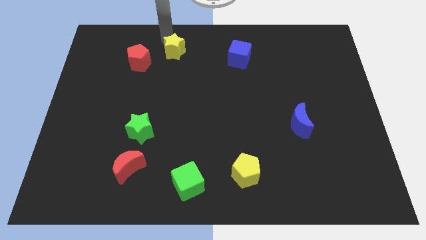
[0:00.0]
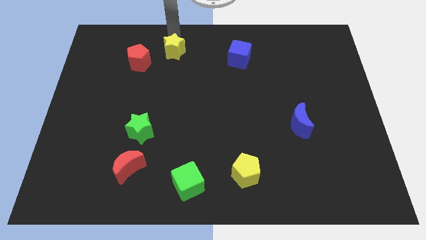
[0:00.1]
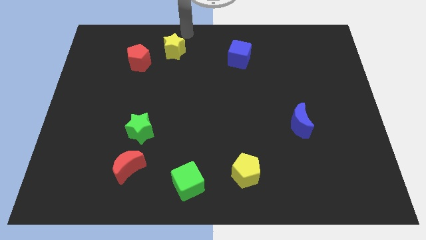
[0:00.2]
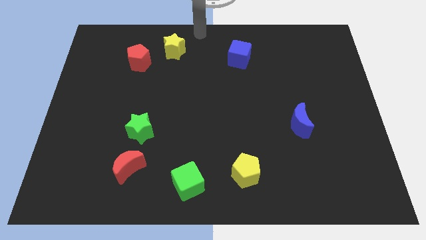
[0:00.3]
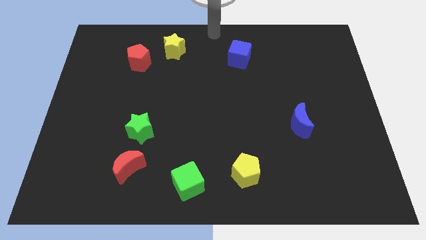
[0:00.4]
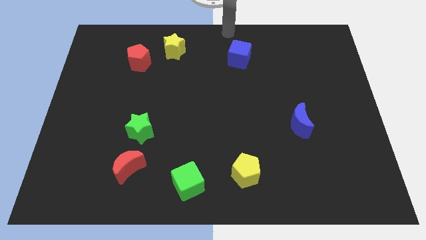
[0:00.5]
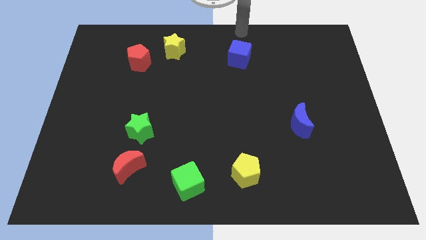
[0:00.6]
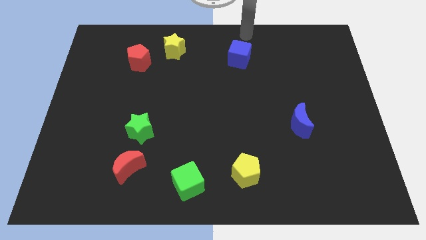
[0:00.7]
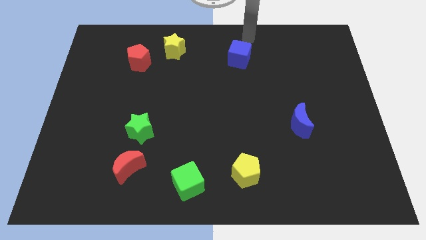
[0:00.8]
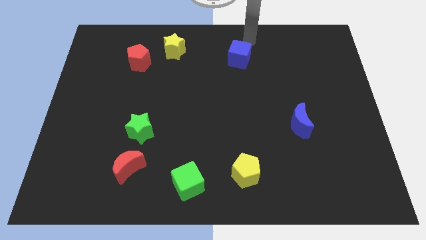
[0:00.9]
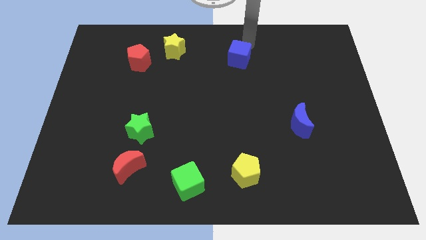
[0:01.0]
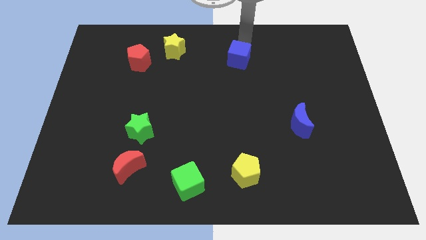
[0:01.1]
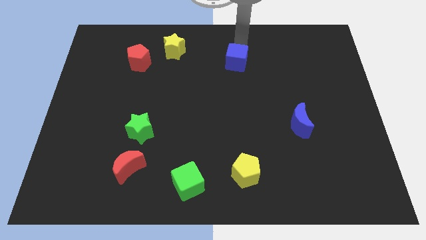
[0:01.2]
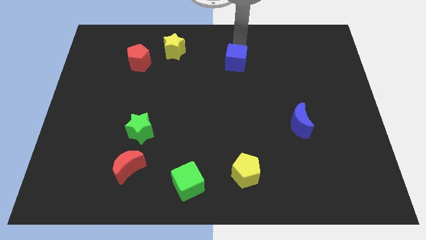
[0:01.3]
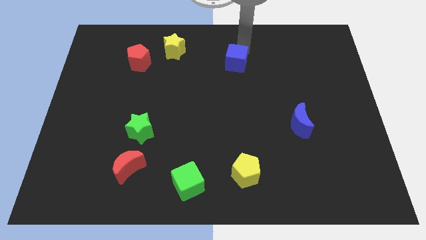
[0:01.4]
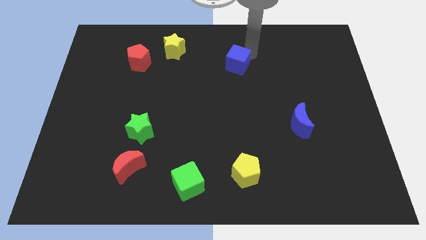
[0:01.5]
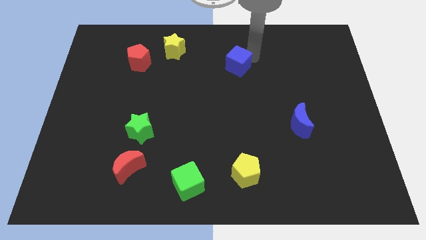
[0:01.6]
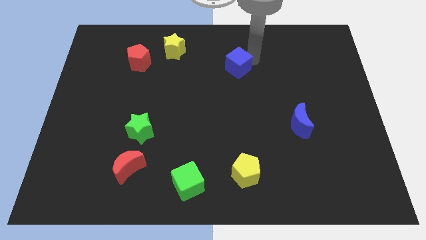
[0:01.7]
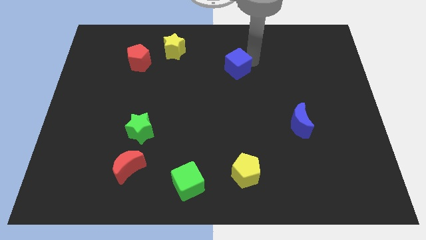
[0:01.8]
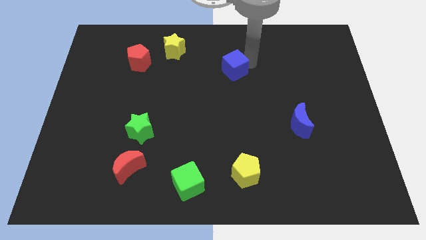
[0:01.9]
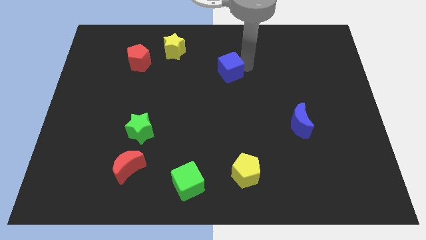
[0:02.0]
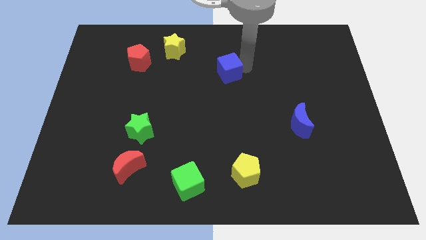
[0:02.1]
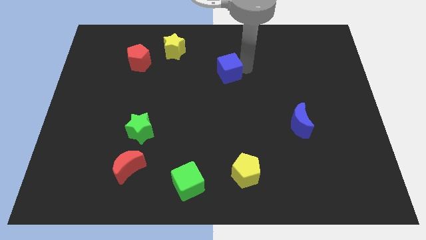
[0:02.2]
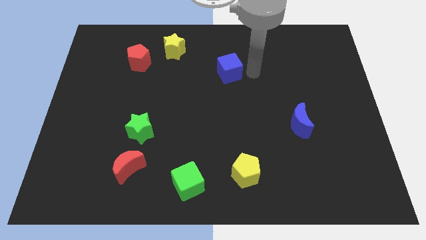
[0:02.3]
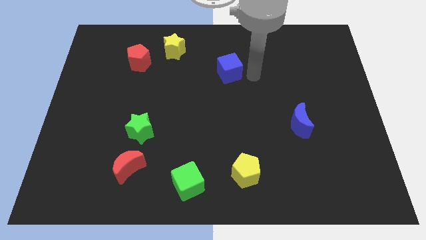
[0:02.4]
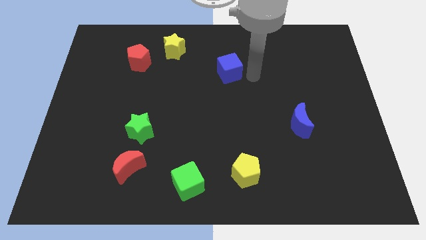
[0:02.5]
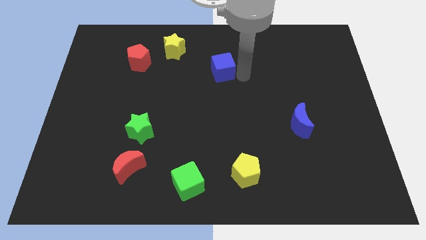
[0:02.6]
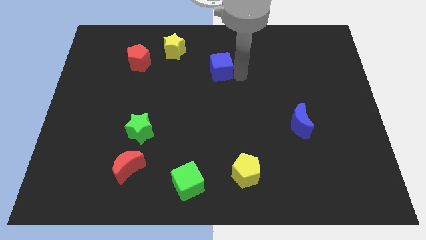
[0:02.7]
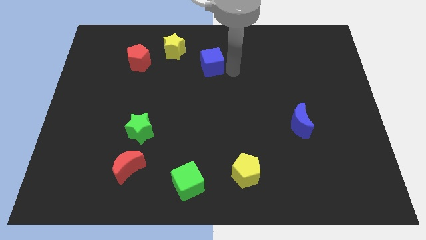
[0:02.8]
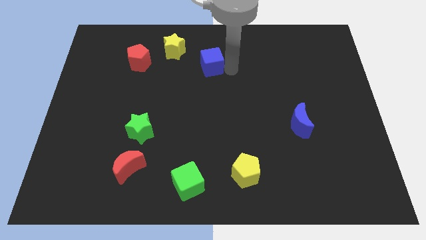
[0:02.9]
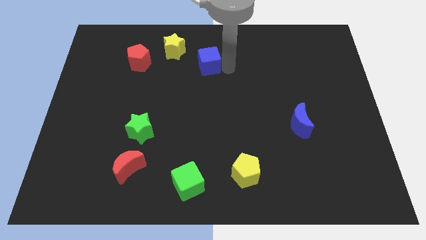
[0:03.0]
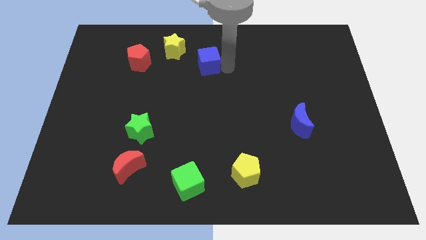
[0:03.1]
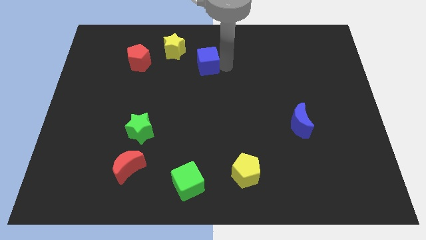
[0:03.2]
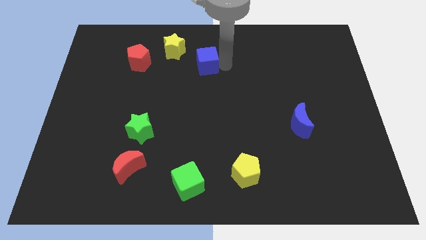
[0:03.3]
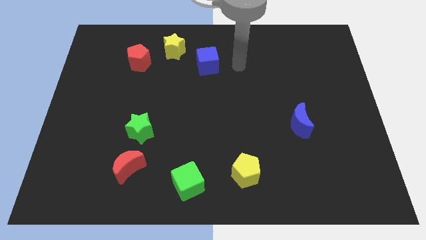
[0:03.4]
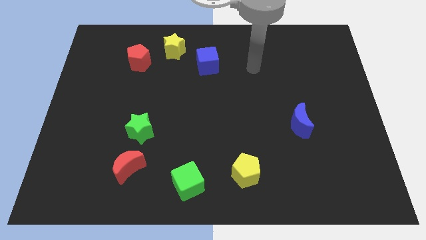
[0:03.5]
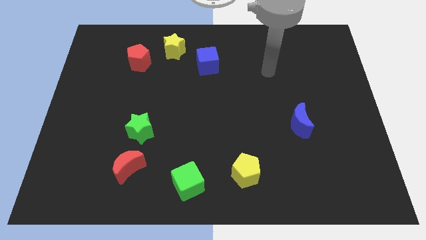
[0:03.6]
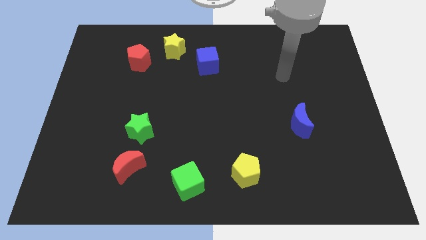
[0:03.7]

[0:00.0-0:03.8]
put the red pentagon and the blue cube in a line horizontally

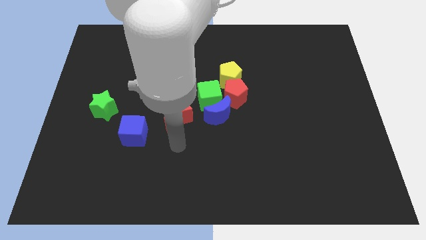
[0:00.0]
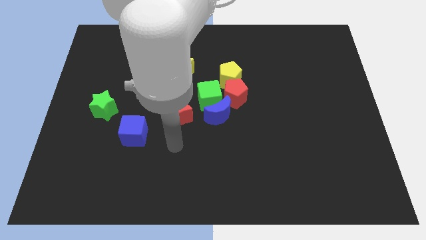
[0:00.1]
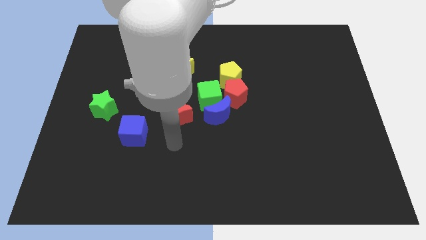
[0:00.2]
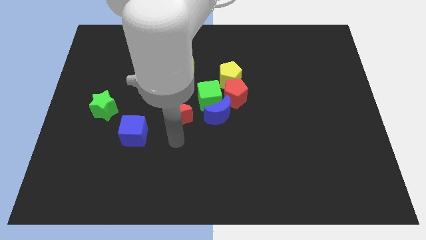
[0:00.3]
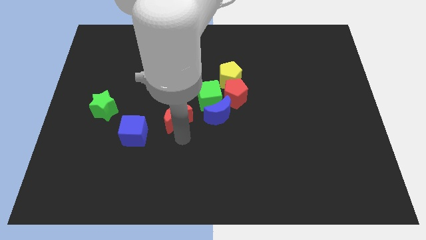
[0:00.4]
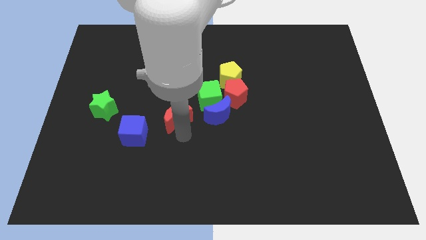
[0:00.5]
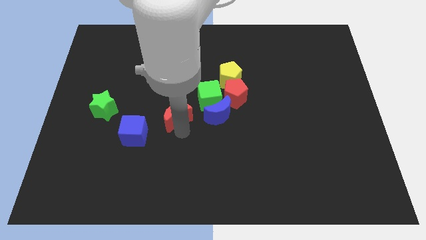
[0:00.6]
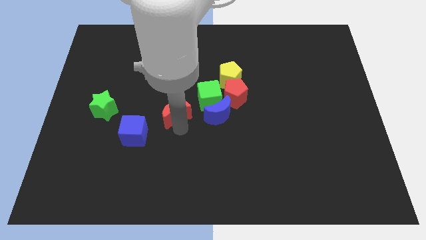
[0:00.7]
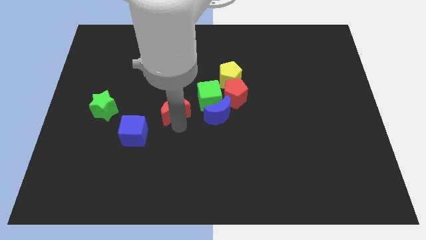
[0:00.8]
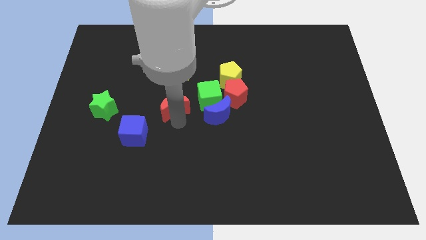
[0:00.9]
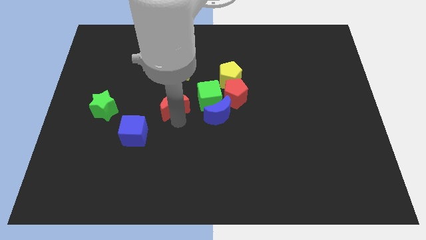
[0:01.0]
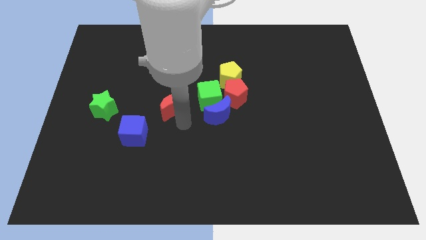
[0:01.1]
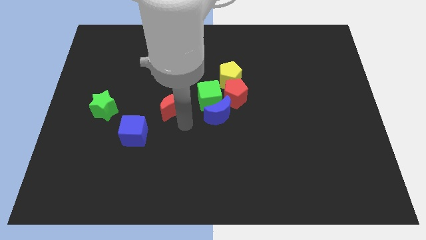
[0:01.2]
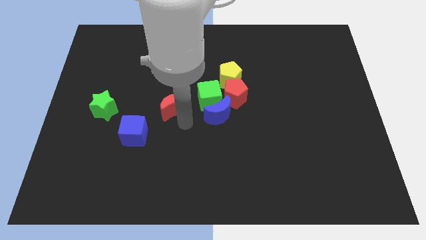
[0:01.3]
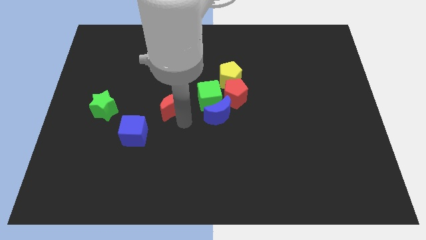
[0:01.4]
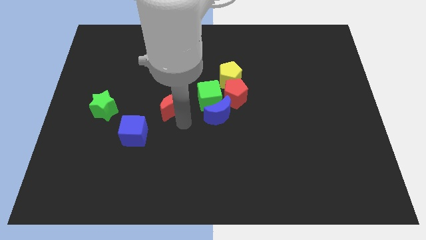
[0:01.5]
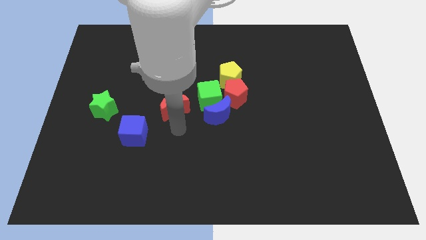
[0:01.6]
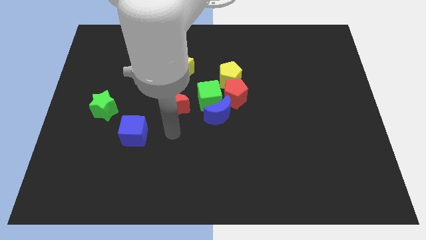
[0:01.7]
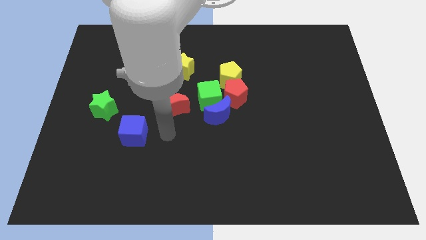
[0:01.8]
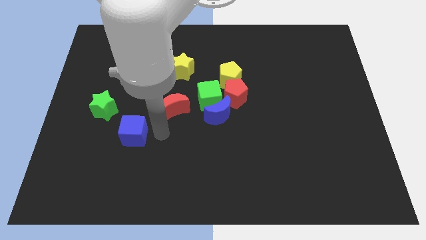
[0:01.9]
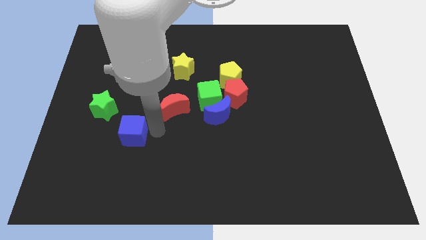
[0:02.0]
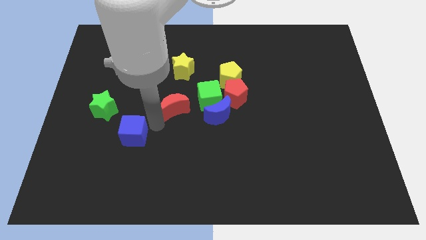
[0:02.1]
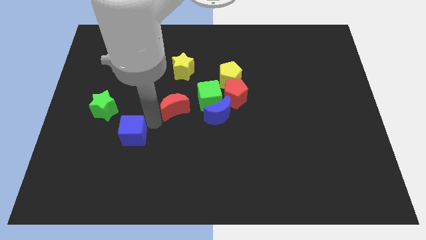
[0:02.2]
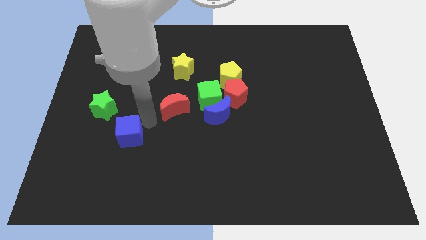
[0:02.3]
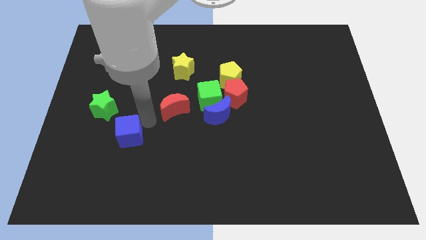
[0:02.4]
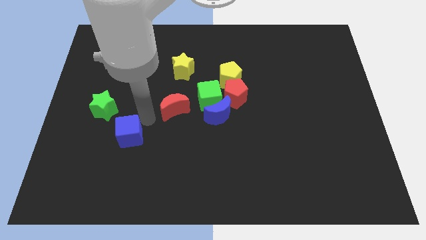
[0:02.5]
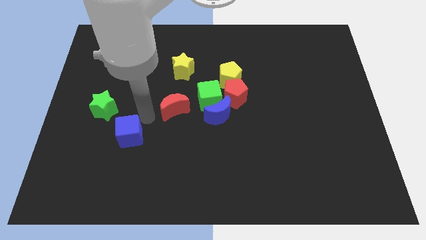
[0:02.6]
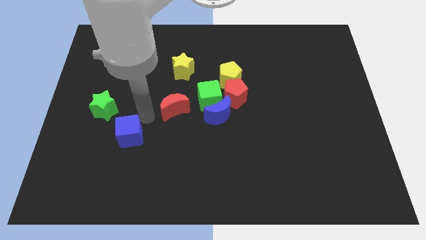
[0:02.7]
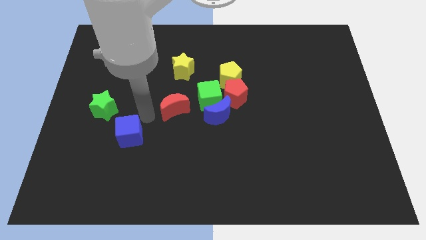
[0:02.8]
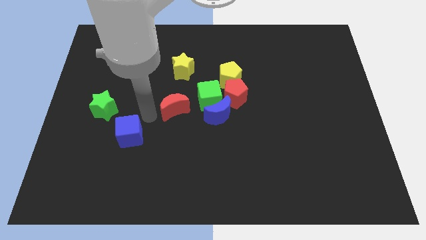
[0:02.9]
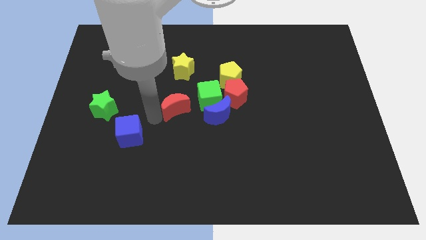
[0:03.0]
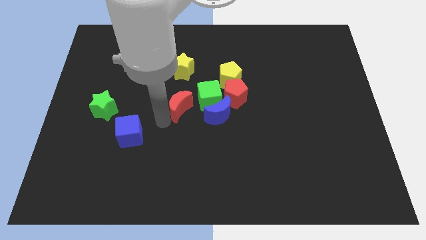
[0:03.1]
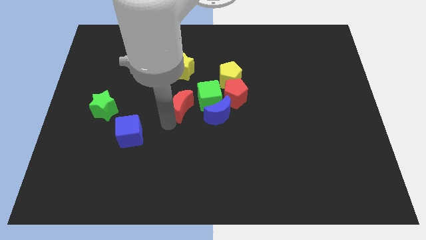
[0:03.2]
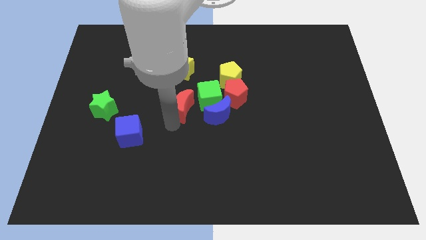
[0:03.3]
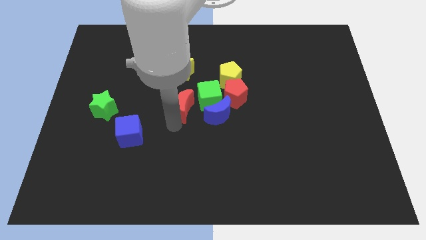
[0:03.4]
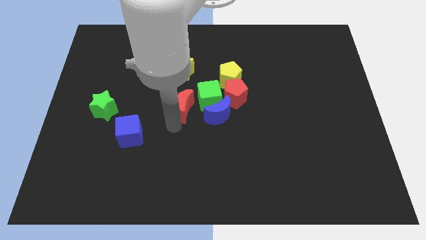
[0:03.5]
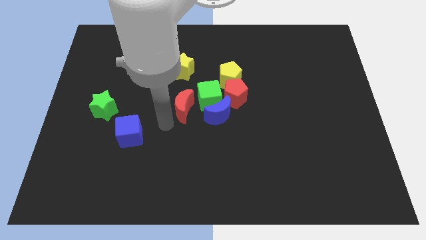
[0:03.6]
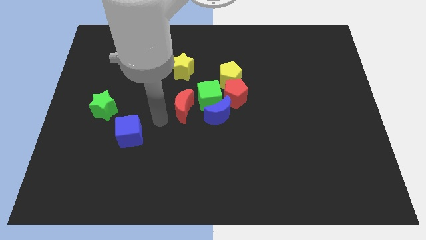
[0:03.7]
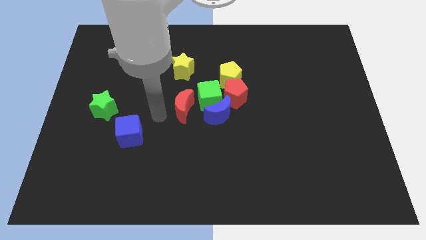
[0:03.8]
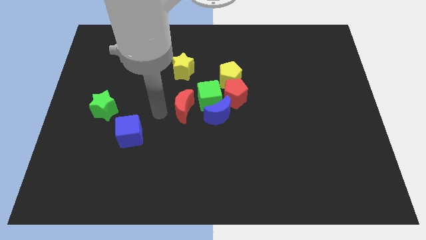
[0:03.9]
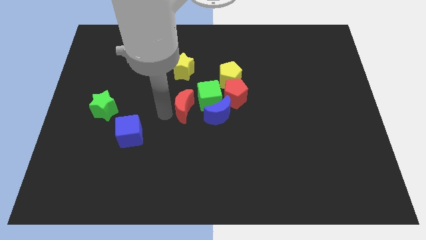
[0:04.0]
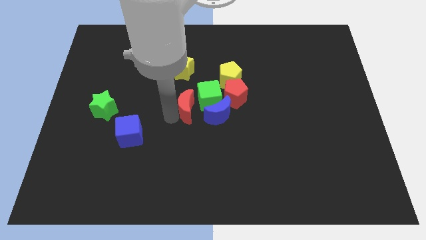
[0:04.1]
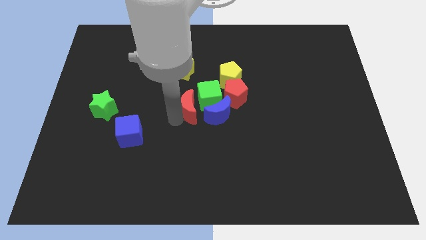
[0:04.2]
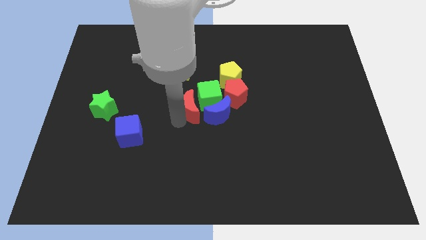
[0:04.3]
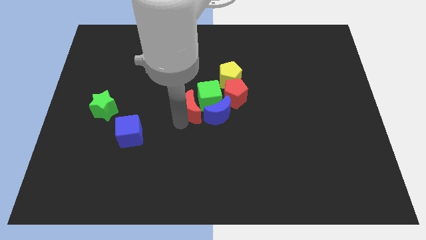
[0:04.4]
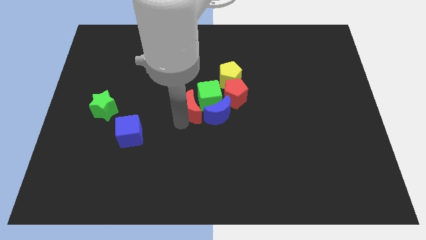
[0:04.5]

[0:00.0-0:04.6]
push the red half moon left to the green cube

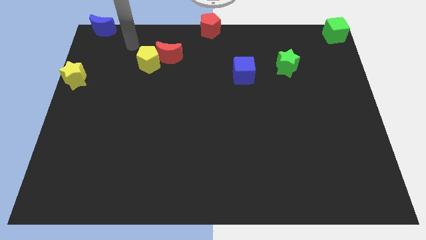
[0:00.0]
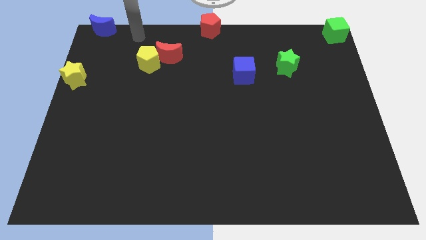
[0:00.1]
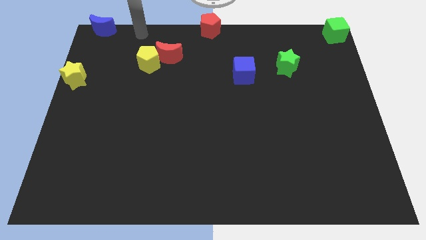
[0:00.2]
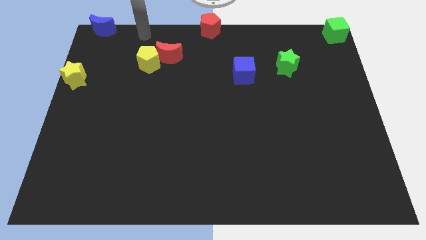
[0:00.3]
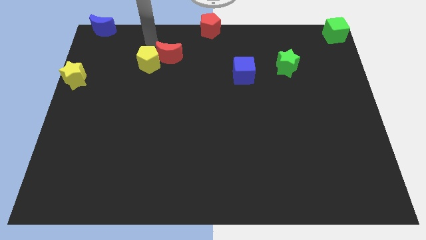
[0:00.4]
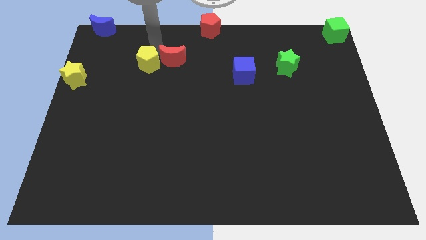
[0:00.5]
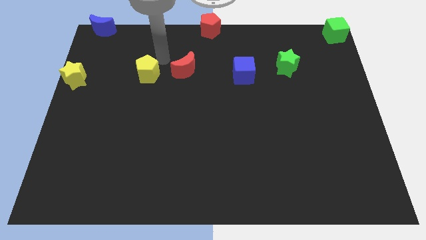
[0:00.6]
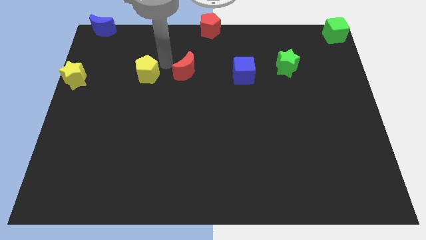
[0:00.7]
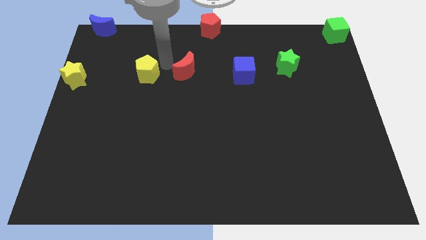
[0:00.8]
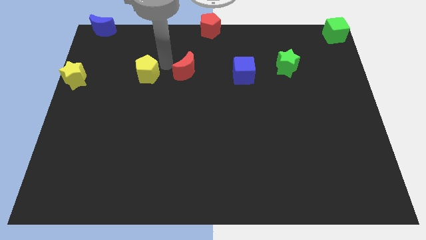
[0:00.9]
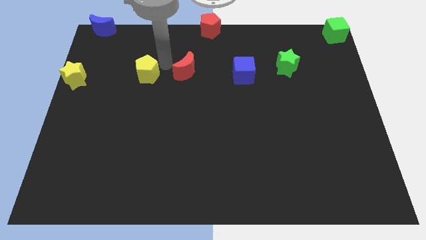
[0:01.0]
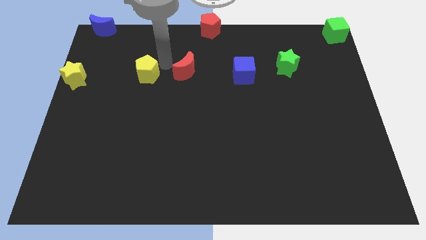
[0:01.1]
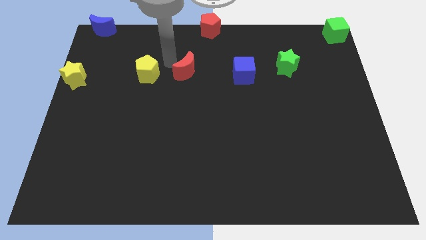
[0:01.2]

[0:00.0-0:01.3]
separate the yellow pentagon and the red crescent
